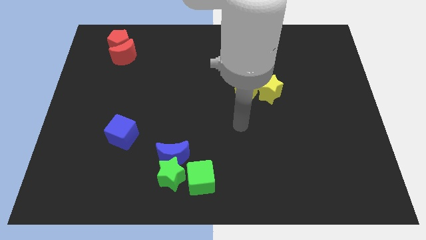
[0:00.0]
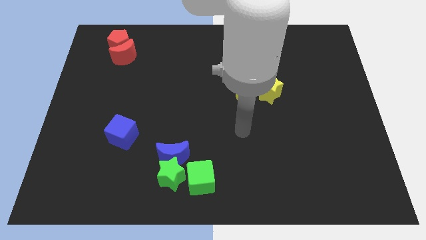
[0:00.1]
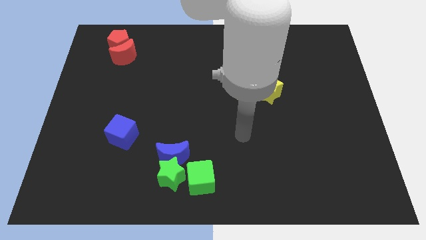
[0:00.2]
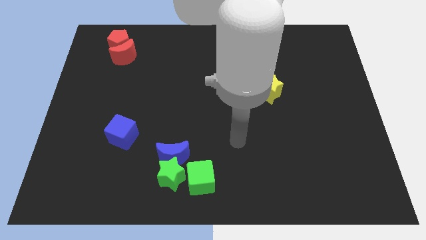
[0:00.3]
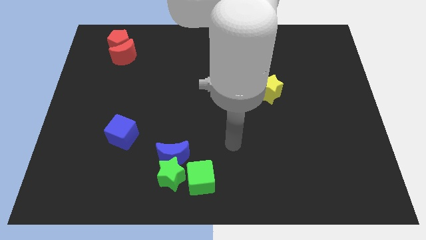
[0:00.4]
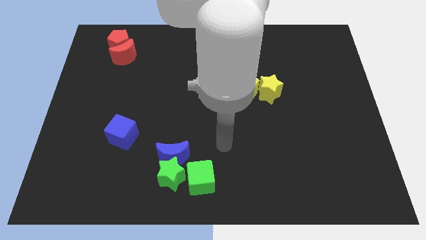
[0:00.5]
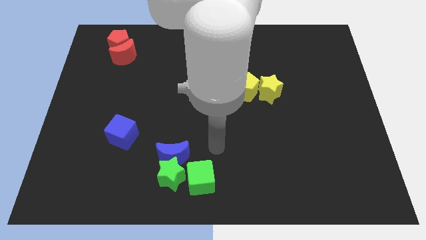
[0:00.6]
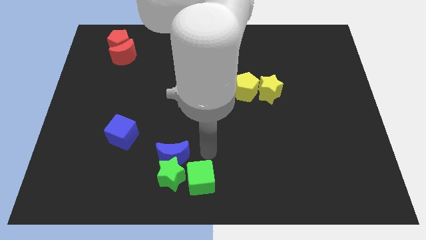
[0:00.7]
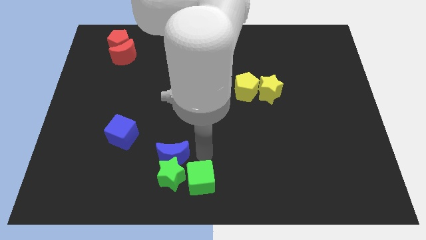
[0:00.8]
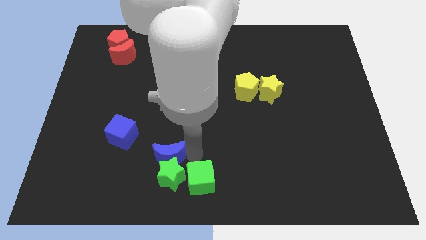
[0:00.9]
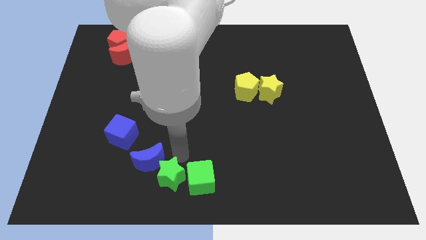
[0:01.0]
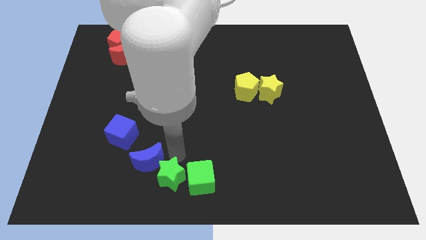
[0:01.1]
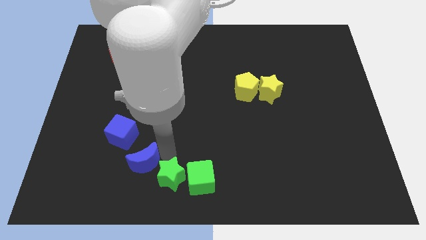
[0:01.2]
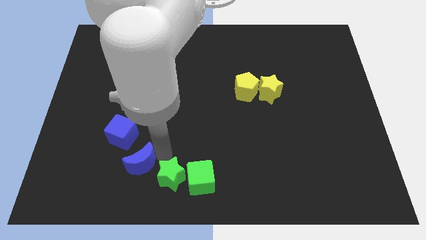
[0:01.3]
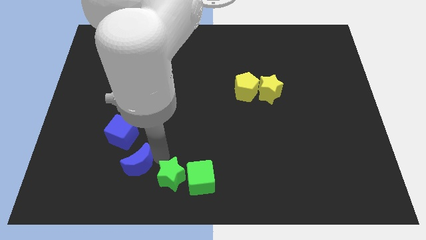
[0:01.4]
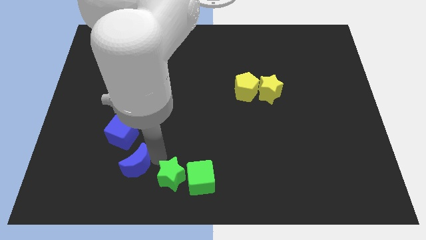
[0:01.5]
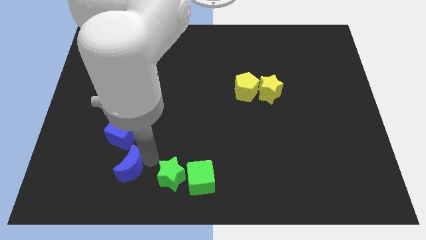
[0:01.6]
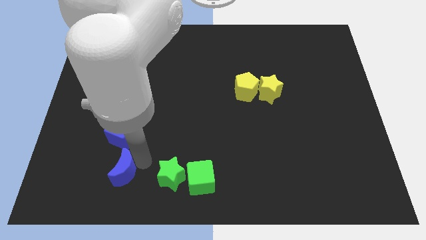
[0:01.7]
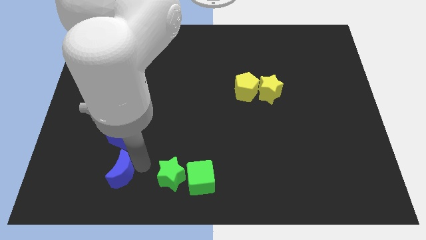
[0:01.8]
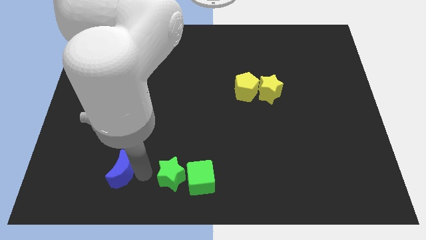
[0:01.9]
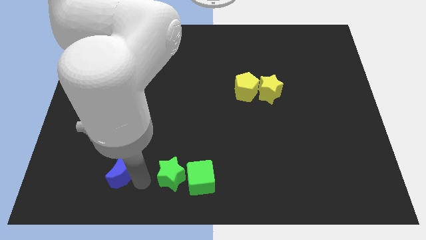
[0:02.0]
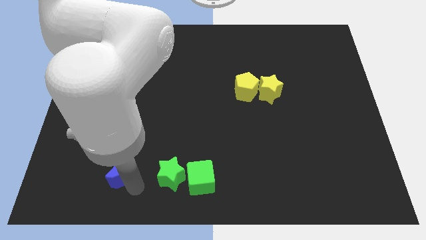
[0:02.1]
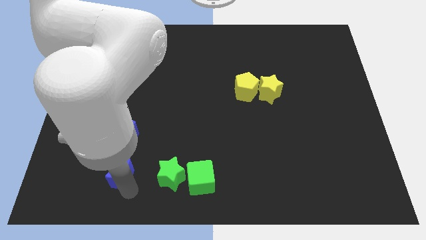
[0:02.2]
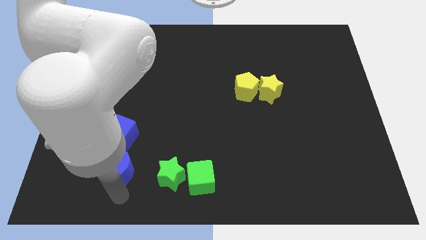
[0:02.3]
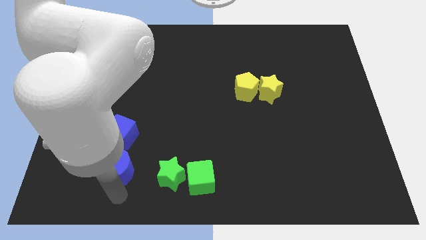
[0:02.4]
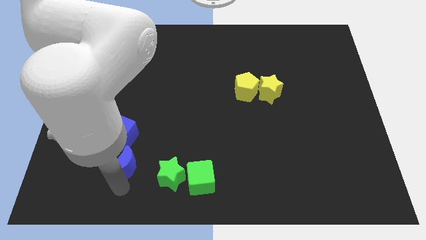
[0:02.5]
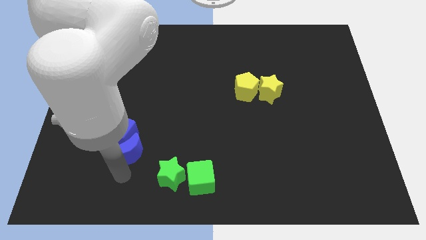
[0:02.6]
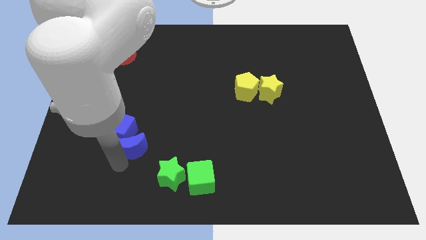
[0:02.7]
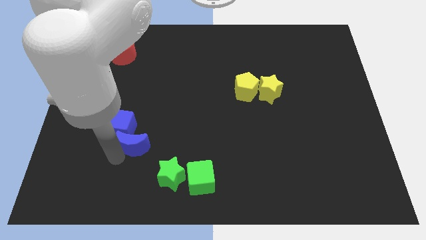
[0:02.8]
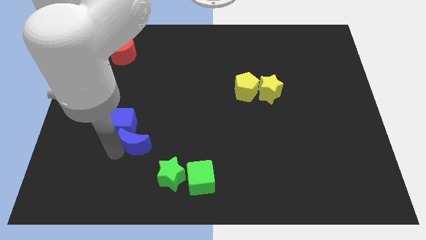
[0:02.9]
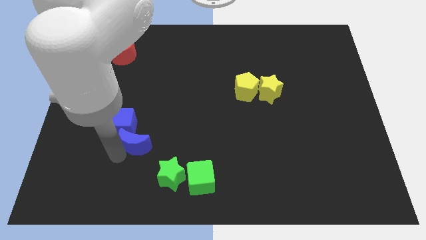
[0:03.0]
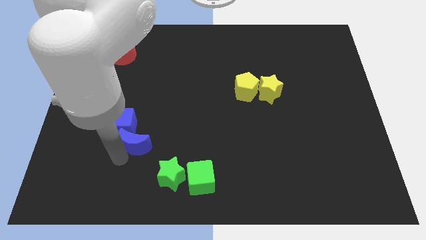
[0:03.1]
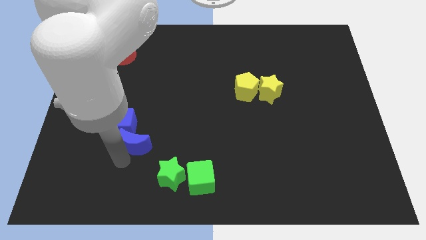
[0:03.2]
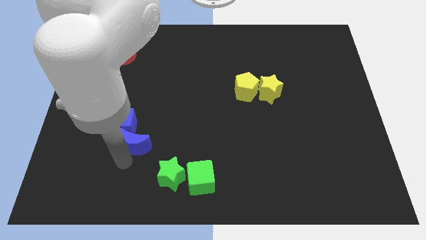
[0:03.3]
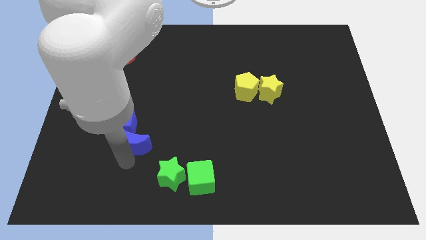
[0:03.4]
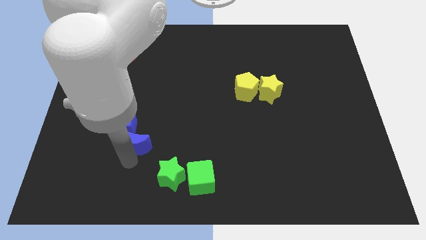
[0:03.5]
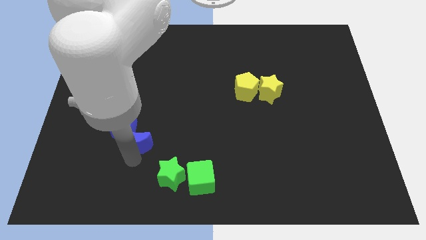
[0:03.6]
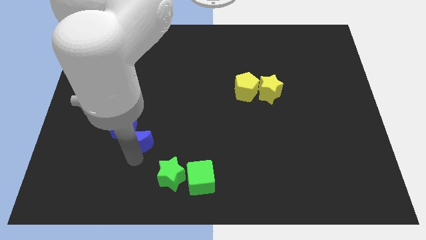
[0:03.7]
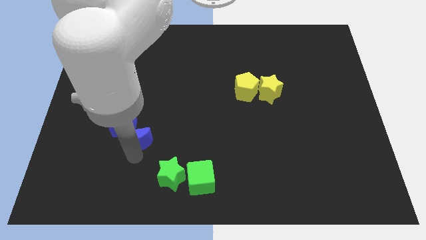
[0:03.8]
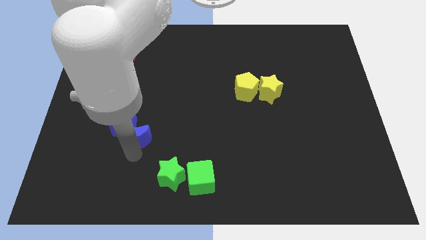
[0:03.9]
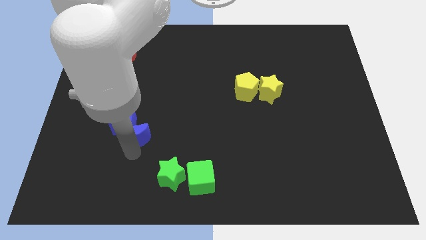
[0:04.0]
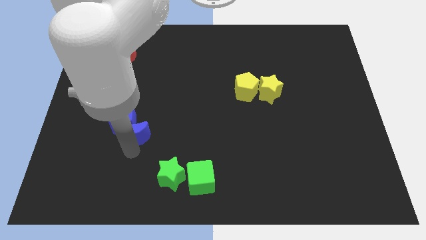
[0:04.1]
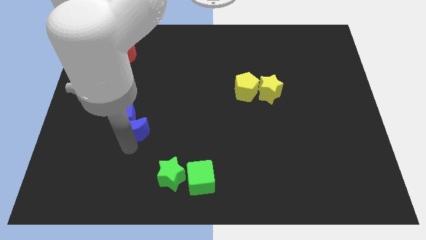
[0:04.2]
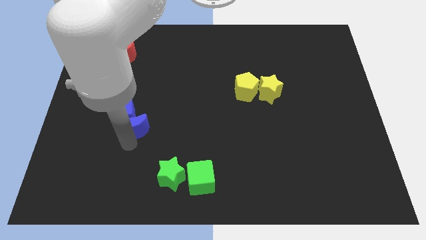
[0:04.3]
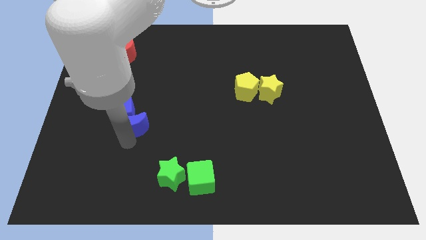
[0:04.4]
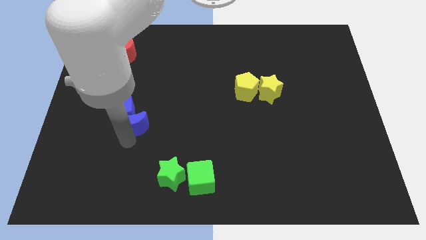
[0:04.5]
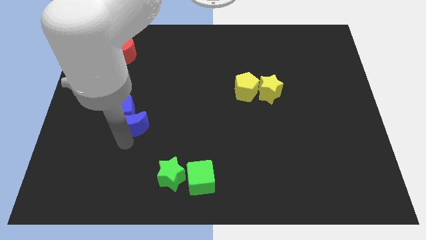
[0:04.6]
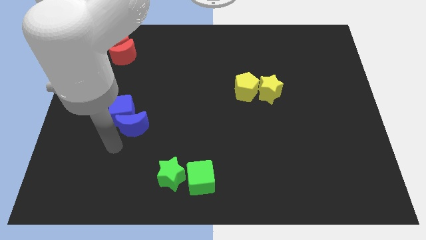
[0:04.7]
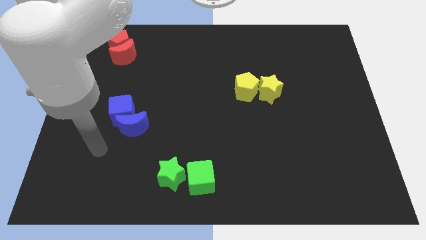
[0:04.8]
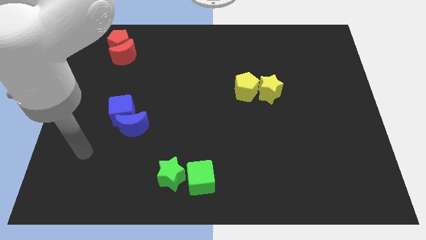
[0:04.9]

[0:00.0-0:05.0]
move blue moon near the blue cube

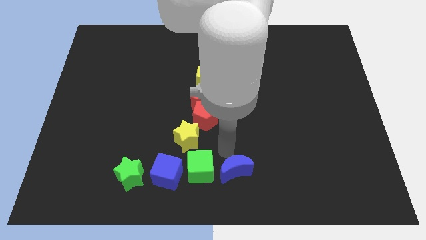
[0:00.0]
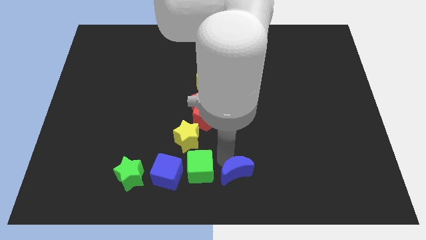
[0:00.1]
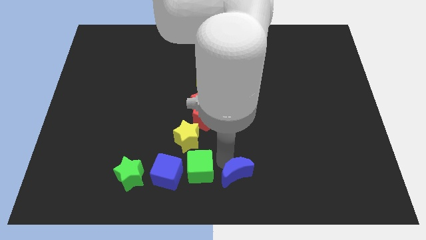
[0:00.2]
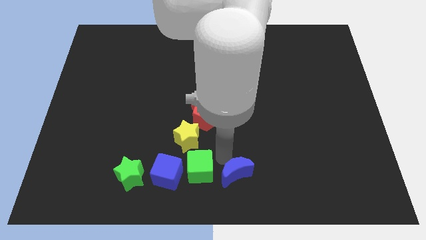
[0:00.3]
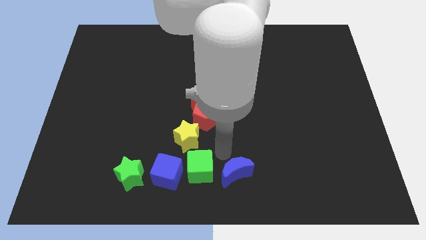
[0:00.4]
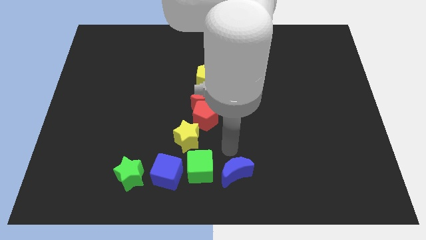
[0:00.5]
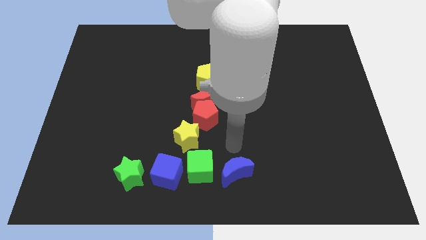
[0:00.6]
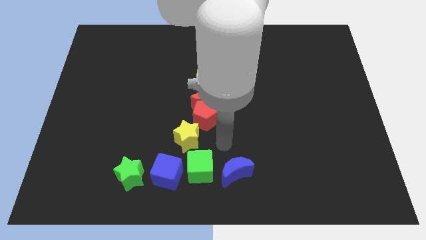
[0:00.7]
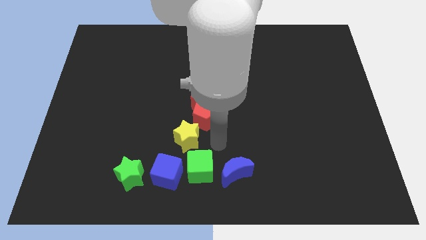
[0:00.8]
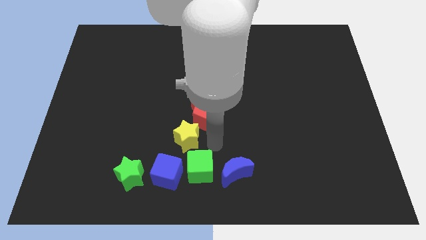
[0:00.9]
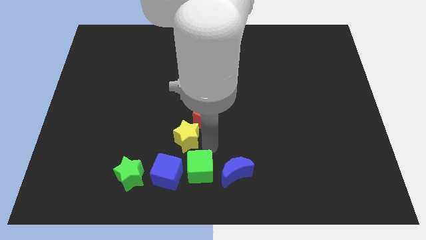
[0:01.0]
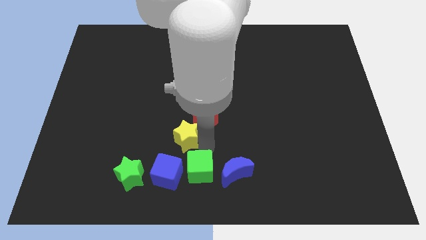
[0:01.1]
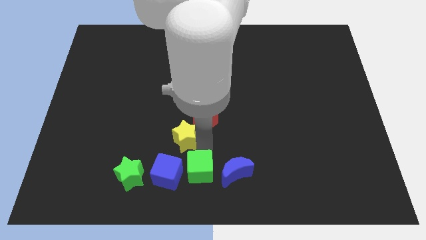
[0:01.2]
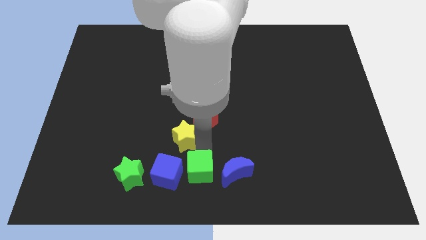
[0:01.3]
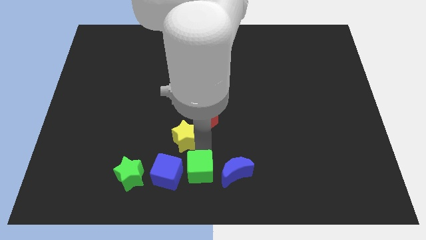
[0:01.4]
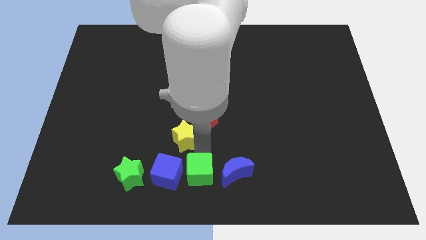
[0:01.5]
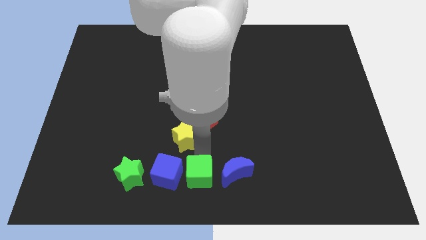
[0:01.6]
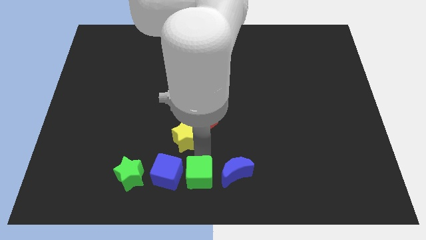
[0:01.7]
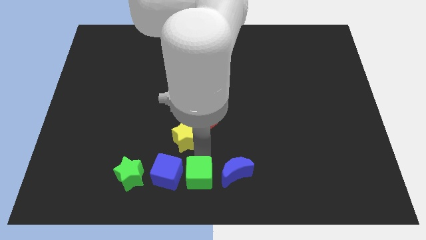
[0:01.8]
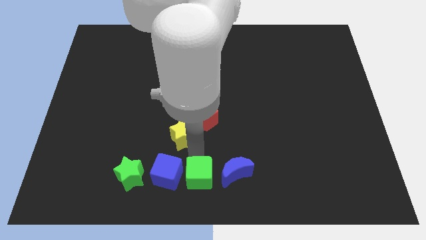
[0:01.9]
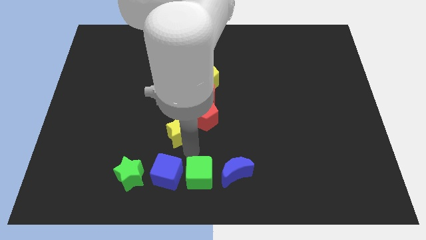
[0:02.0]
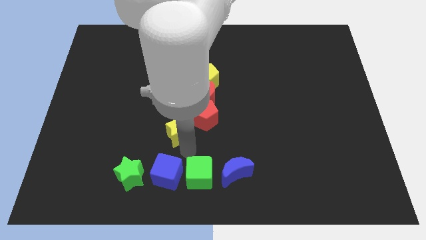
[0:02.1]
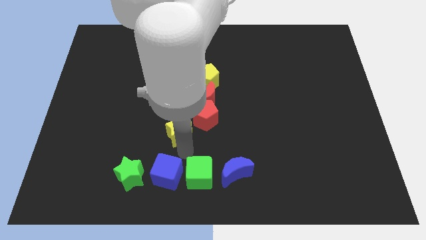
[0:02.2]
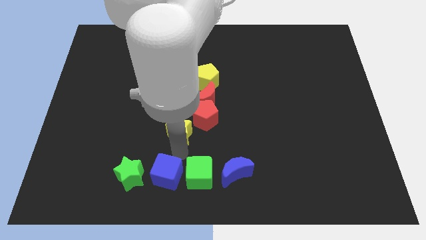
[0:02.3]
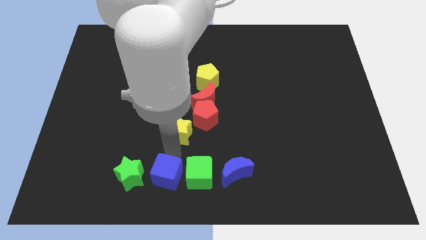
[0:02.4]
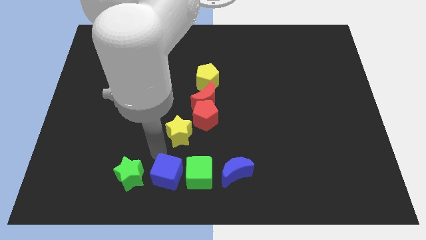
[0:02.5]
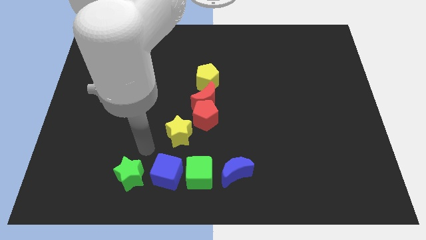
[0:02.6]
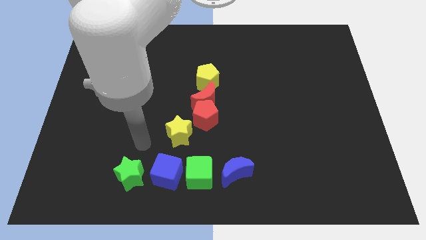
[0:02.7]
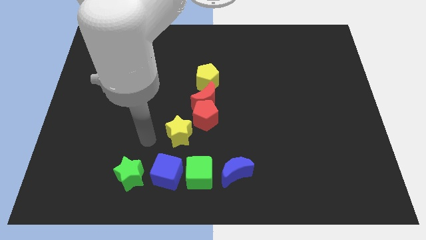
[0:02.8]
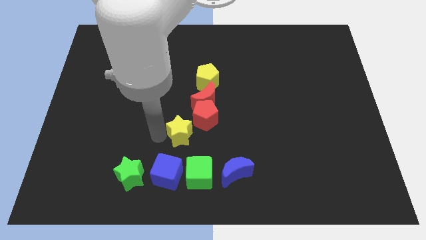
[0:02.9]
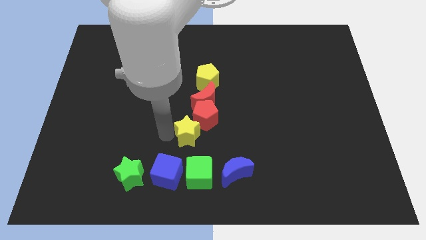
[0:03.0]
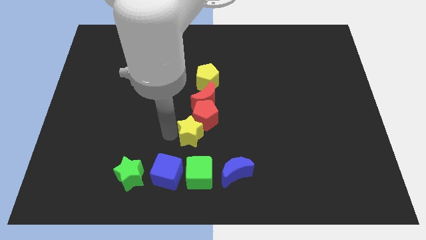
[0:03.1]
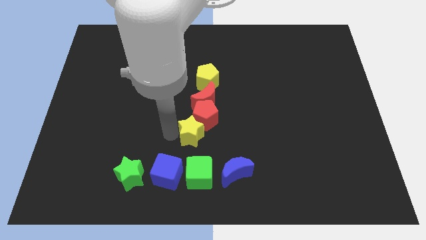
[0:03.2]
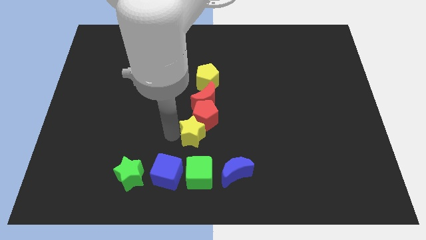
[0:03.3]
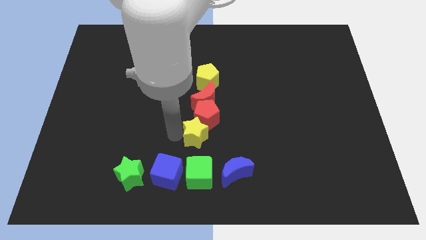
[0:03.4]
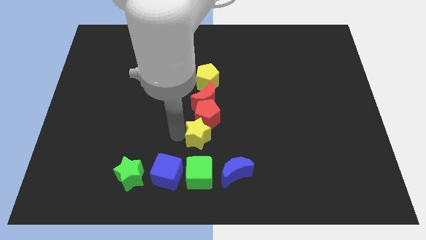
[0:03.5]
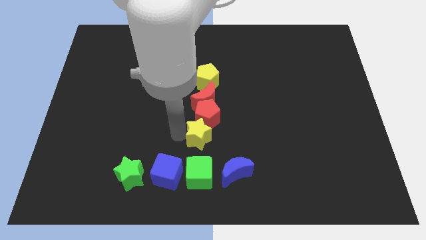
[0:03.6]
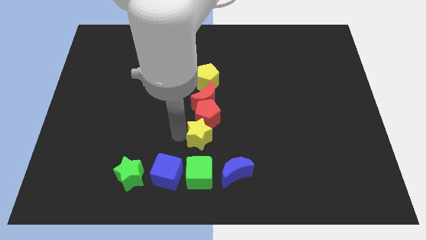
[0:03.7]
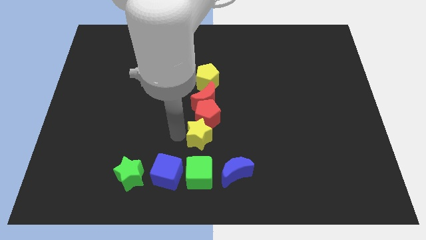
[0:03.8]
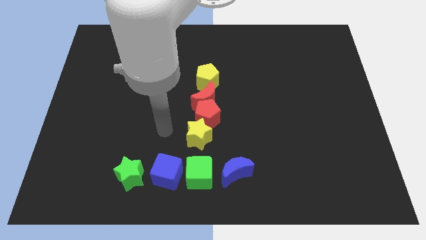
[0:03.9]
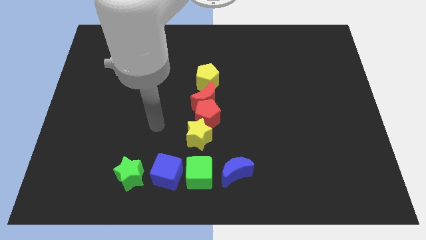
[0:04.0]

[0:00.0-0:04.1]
place the yellow star at the top of the green cube
